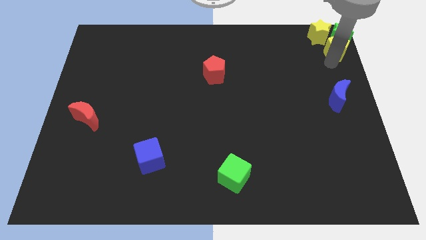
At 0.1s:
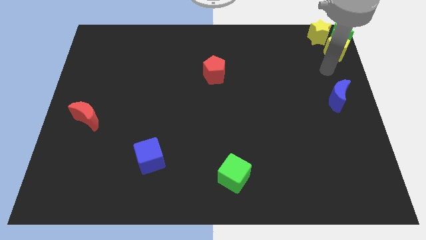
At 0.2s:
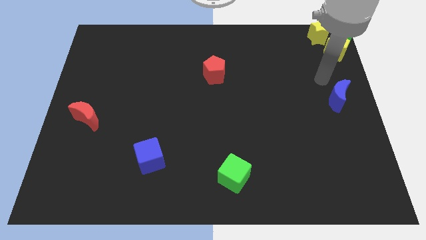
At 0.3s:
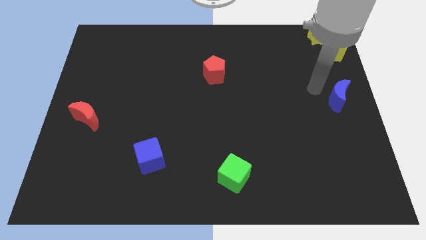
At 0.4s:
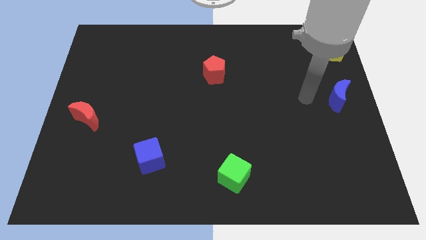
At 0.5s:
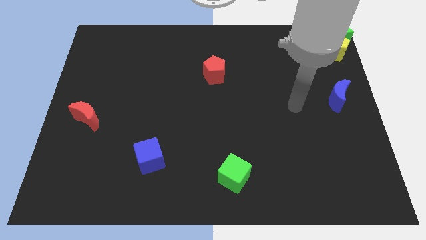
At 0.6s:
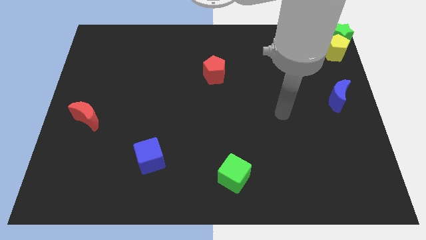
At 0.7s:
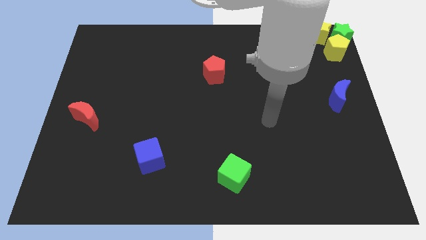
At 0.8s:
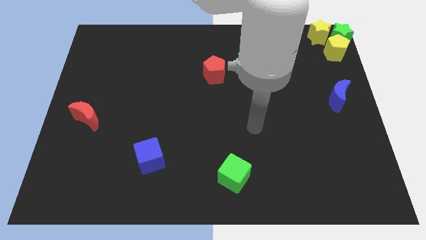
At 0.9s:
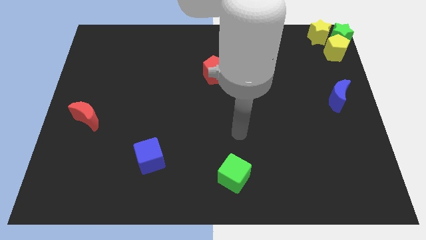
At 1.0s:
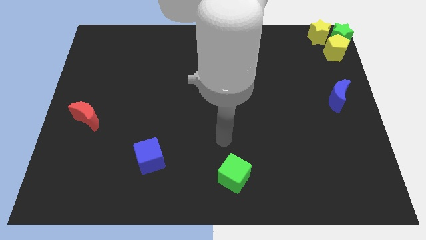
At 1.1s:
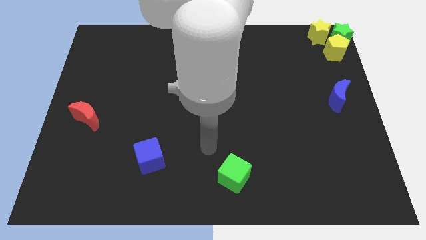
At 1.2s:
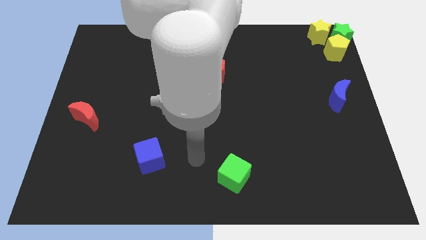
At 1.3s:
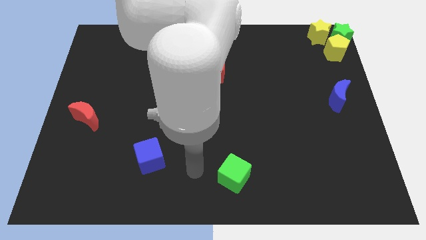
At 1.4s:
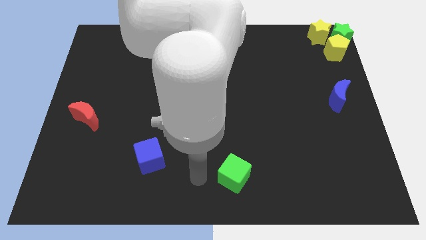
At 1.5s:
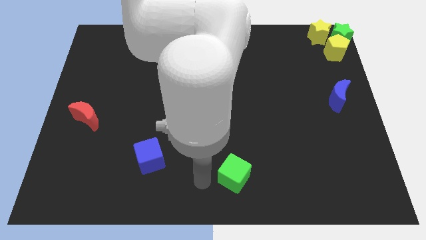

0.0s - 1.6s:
go away from the yellow pentagon

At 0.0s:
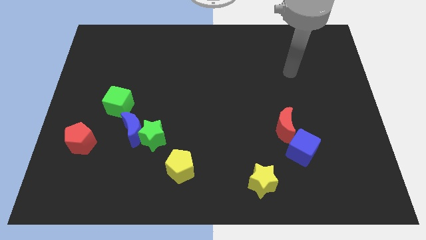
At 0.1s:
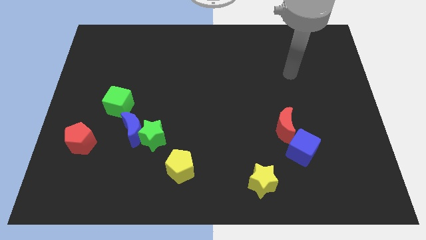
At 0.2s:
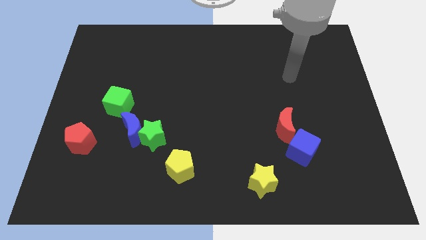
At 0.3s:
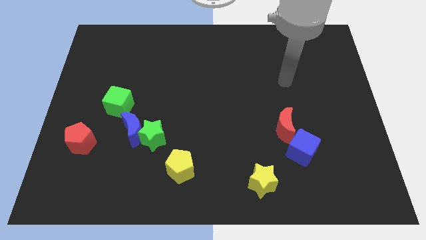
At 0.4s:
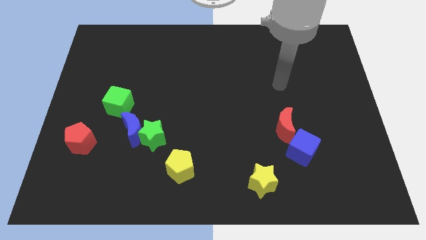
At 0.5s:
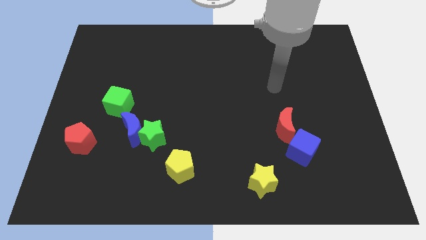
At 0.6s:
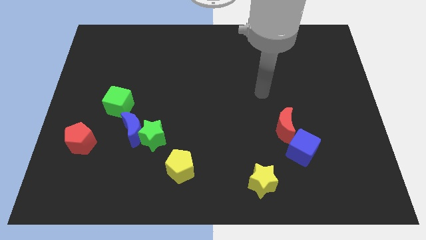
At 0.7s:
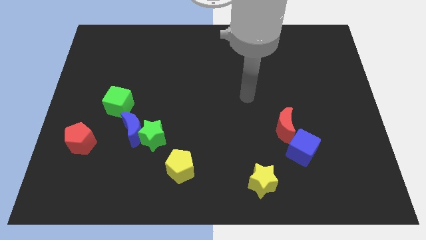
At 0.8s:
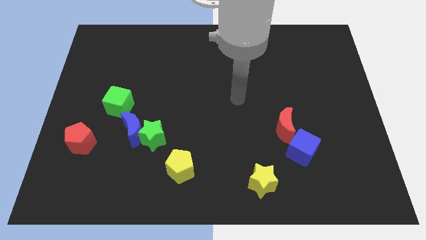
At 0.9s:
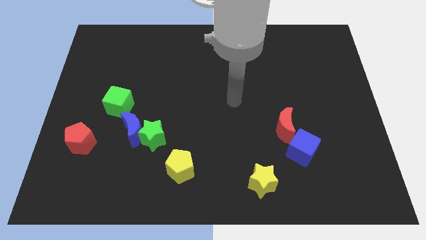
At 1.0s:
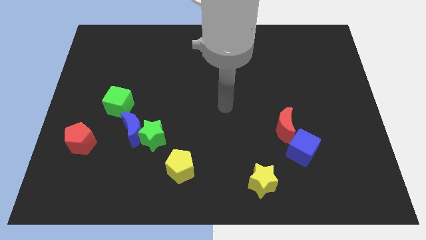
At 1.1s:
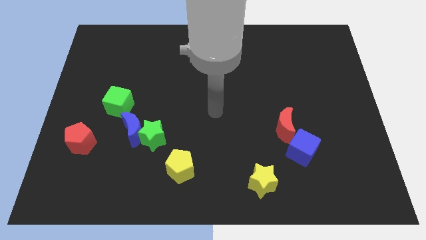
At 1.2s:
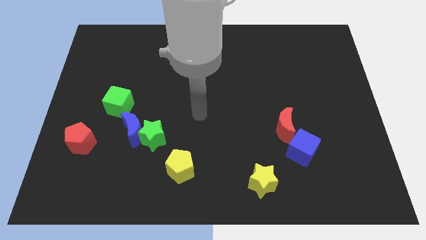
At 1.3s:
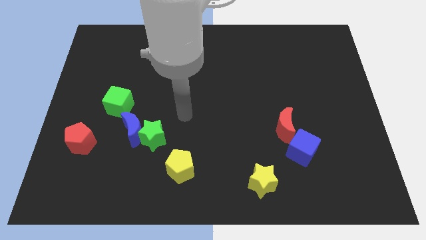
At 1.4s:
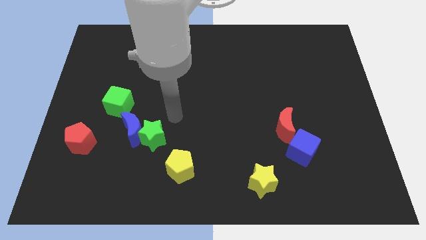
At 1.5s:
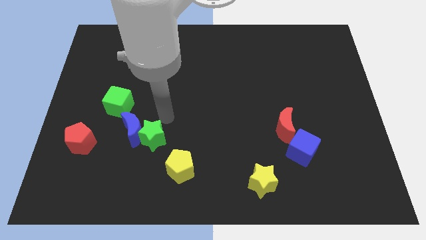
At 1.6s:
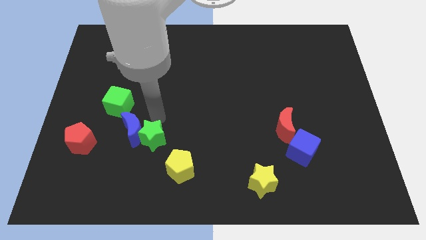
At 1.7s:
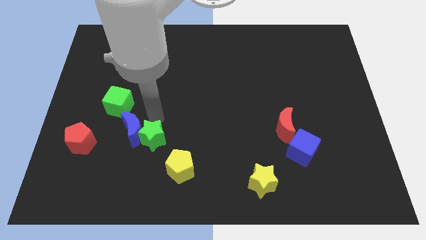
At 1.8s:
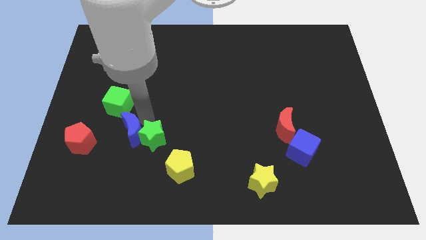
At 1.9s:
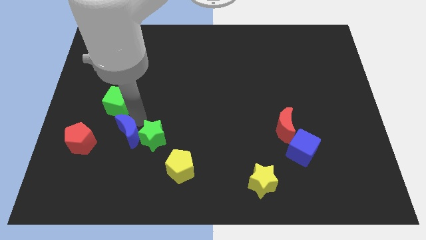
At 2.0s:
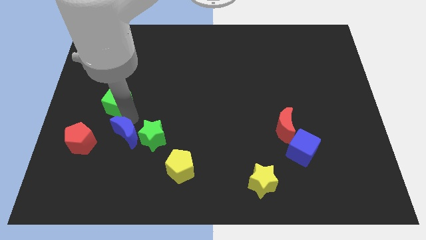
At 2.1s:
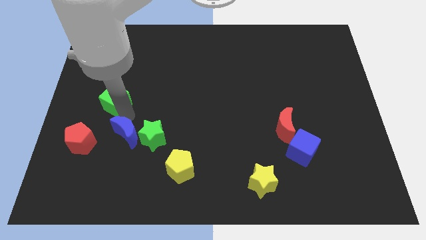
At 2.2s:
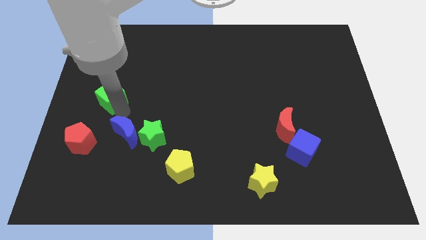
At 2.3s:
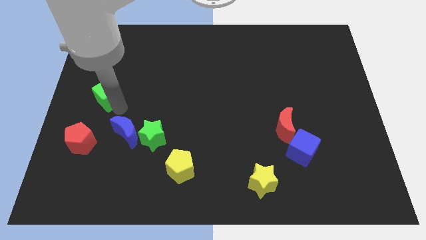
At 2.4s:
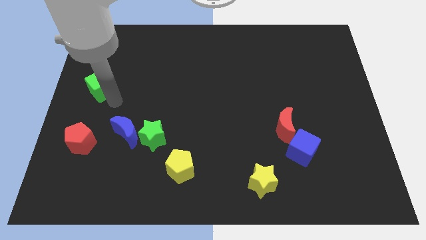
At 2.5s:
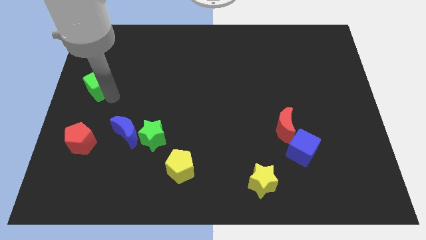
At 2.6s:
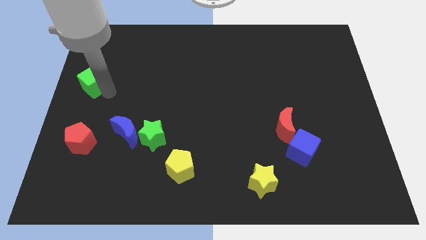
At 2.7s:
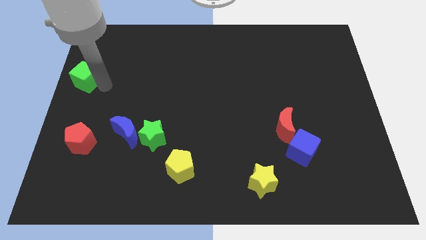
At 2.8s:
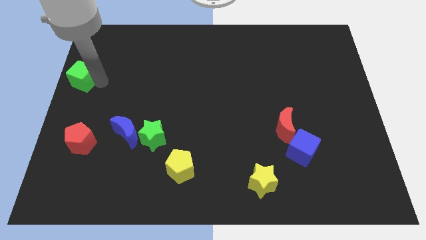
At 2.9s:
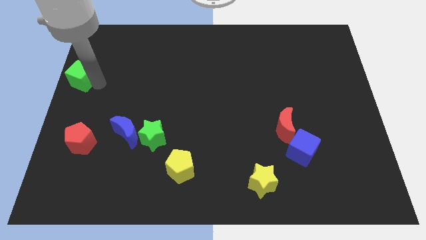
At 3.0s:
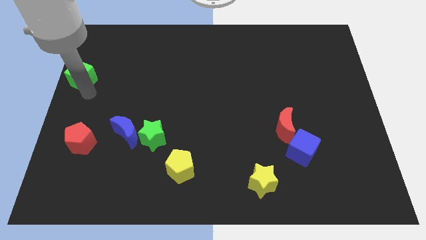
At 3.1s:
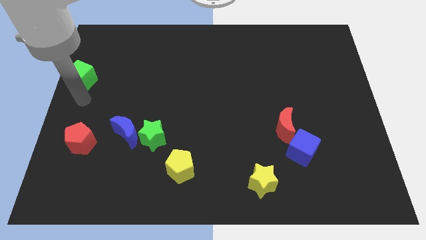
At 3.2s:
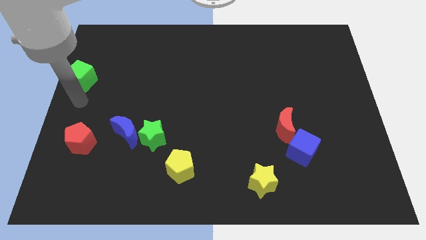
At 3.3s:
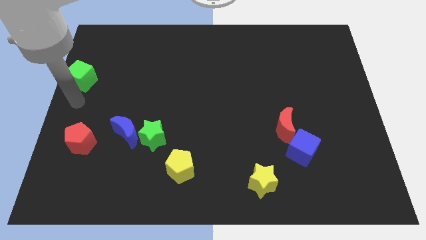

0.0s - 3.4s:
move the green cube to the left center of the board

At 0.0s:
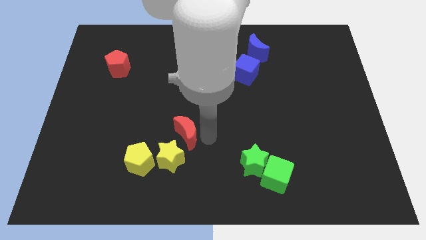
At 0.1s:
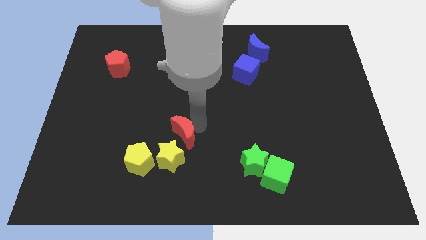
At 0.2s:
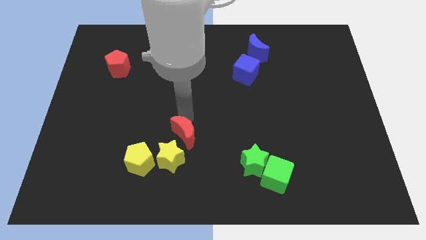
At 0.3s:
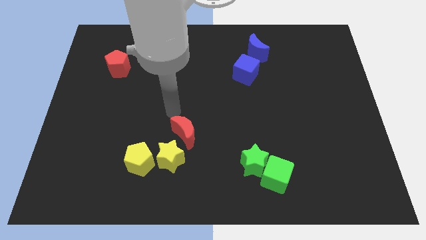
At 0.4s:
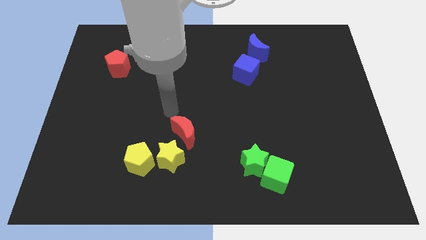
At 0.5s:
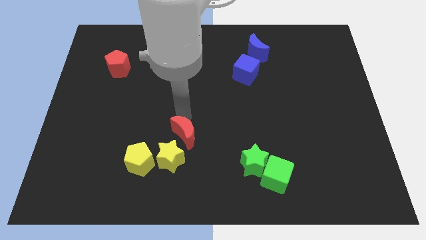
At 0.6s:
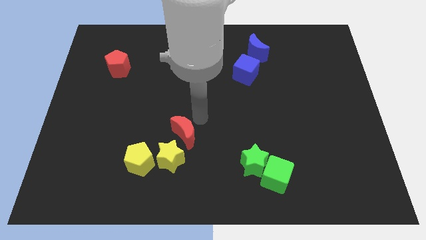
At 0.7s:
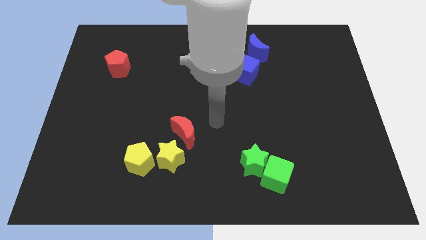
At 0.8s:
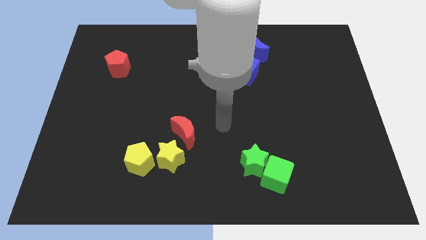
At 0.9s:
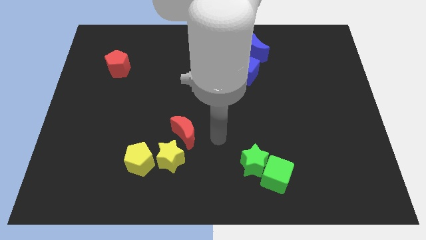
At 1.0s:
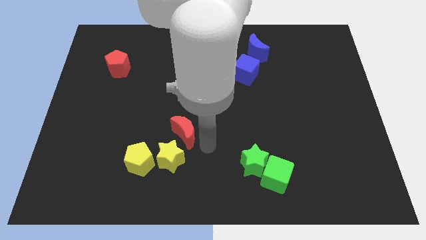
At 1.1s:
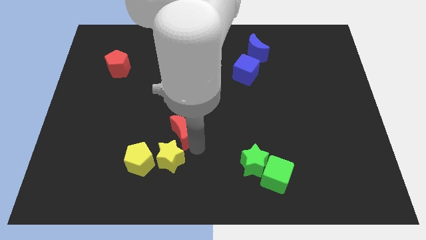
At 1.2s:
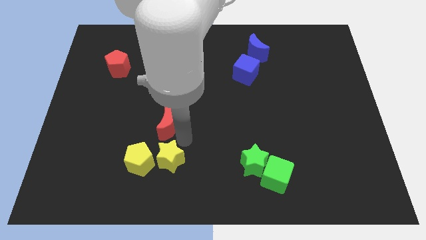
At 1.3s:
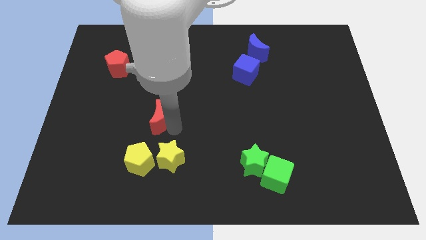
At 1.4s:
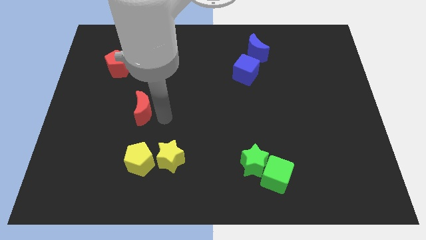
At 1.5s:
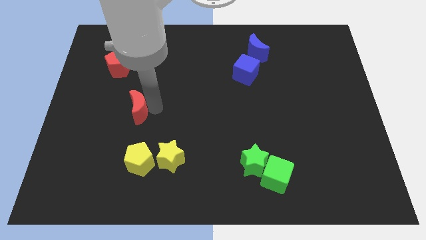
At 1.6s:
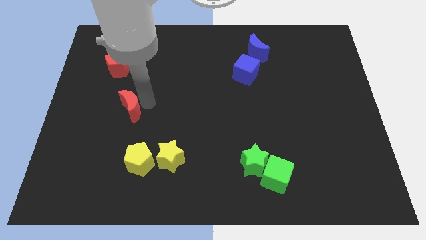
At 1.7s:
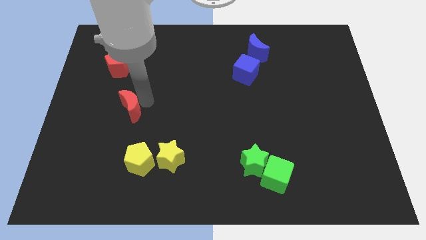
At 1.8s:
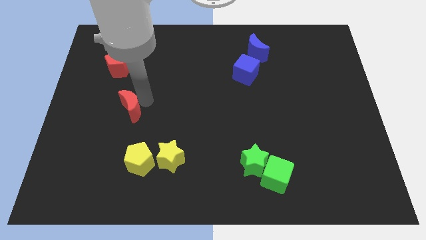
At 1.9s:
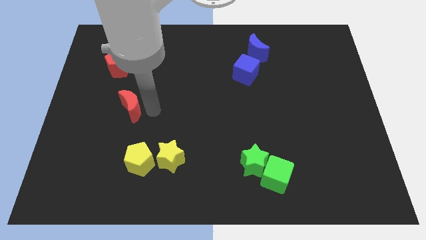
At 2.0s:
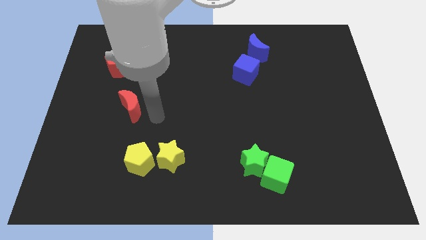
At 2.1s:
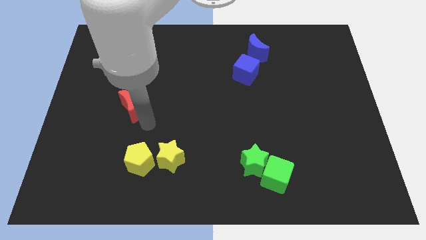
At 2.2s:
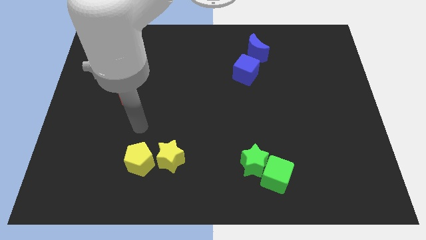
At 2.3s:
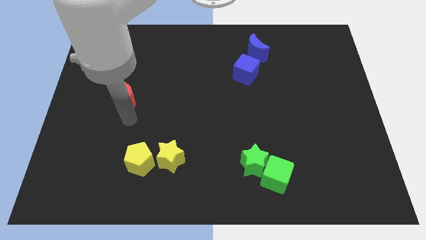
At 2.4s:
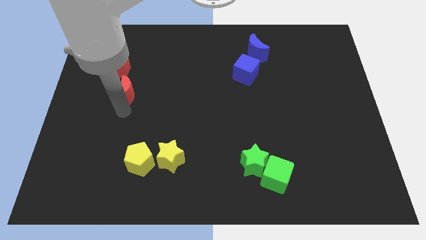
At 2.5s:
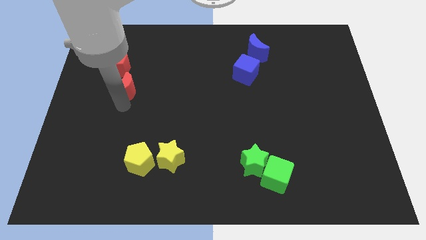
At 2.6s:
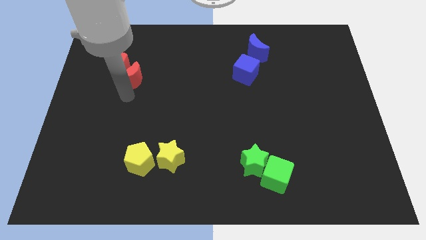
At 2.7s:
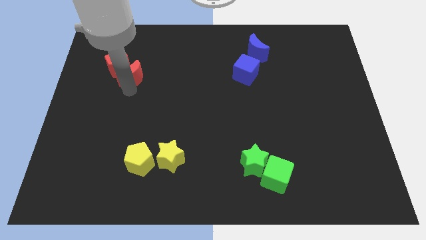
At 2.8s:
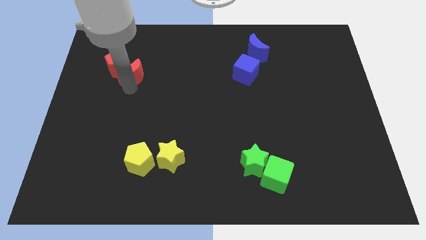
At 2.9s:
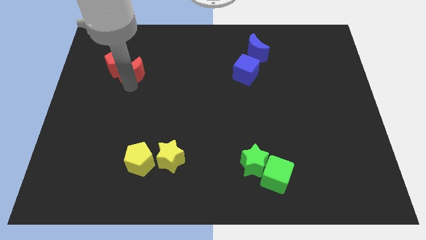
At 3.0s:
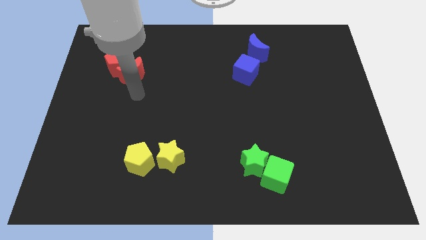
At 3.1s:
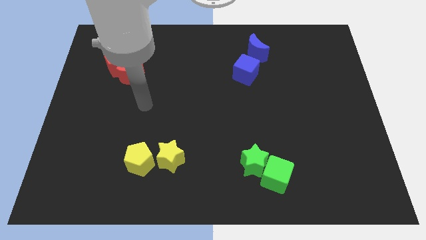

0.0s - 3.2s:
push the red crescent into the red pentagon

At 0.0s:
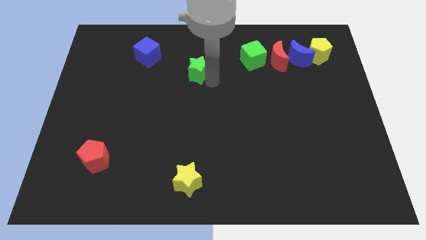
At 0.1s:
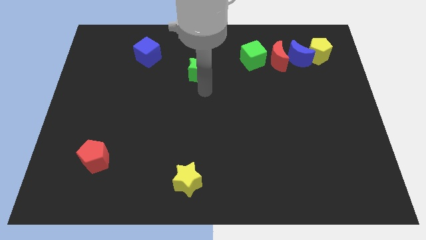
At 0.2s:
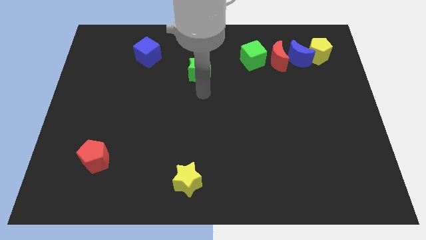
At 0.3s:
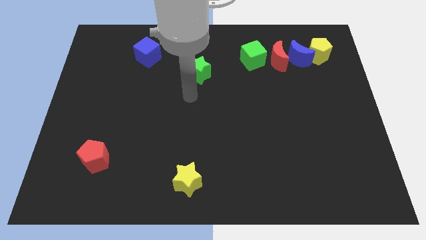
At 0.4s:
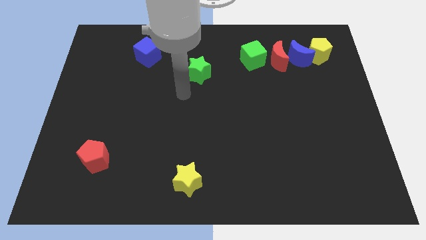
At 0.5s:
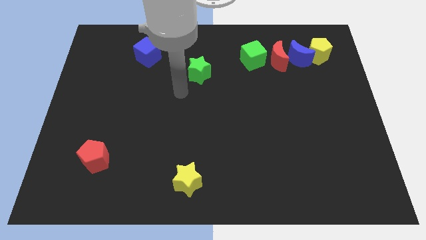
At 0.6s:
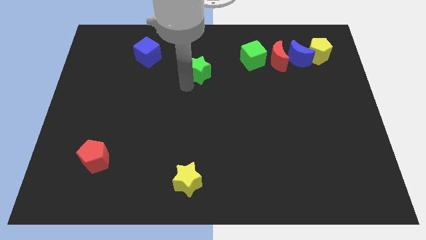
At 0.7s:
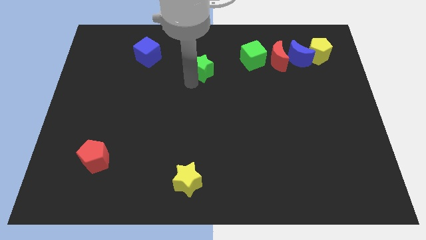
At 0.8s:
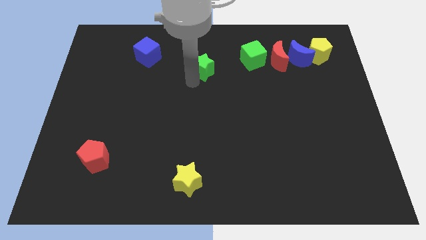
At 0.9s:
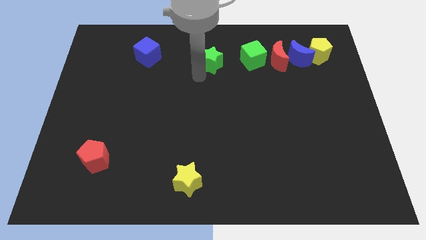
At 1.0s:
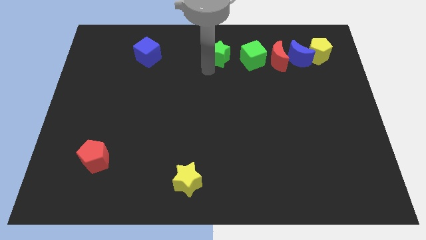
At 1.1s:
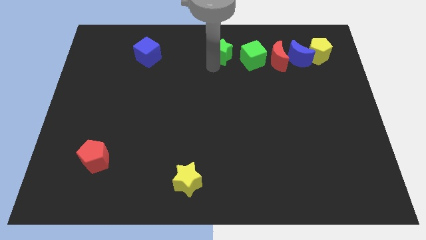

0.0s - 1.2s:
move the green star parallel right to the blue cube
